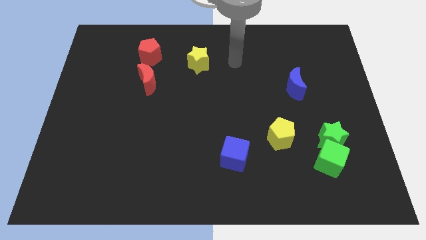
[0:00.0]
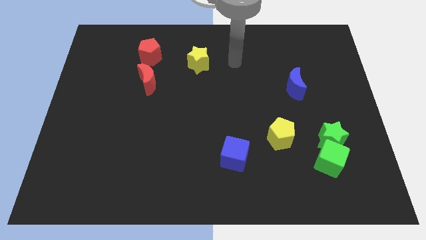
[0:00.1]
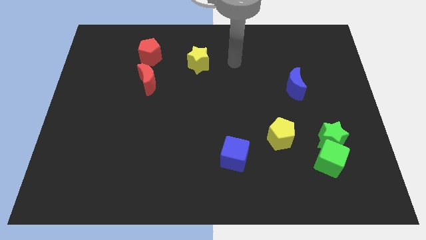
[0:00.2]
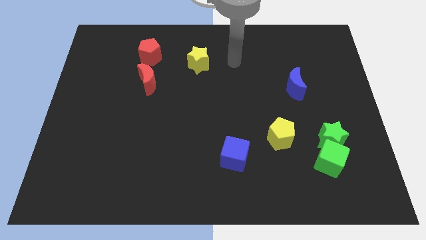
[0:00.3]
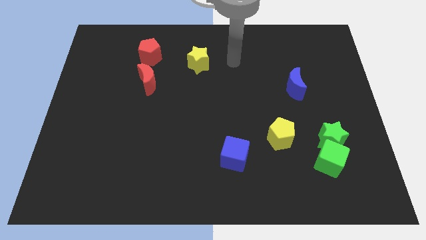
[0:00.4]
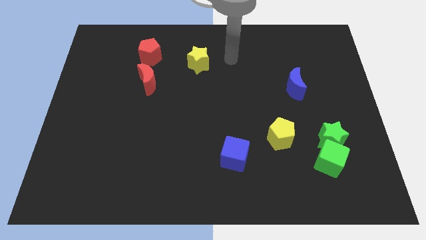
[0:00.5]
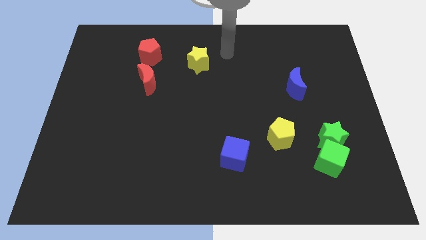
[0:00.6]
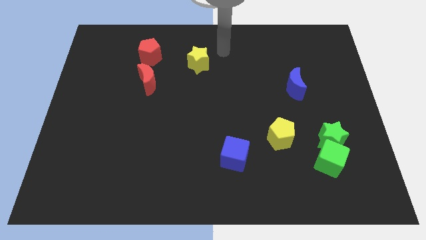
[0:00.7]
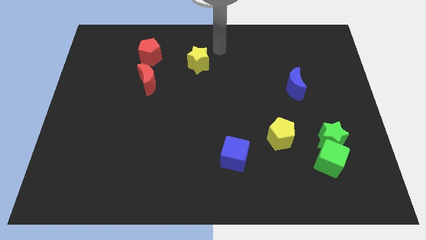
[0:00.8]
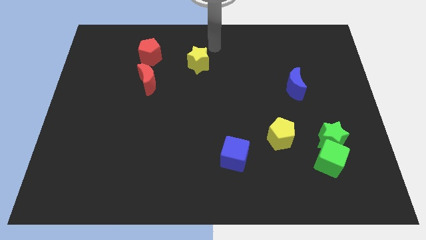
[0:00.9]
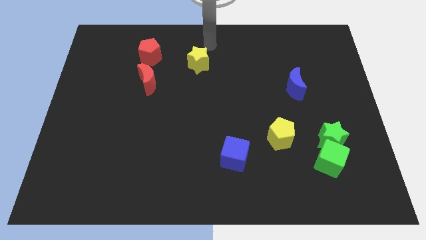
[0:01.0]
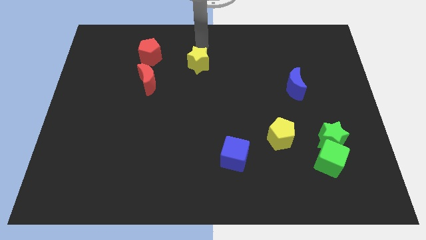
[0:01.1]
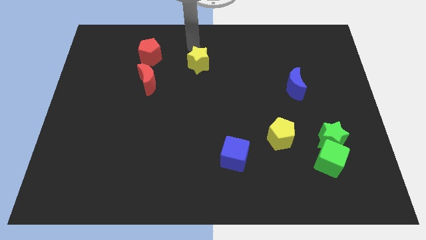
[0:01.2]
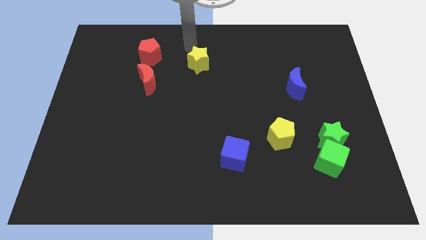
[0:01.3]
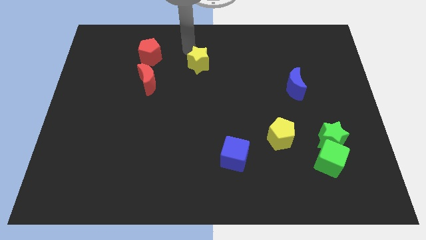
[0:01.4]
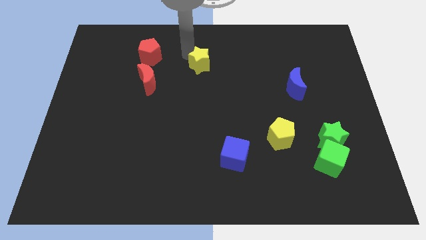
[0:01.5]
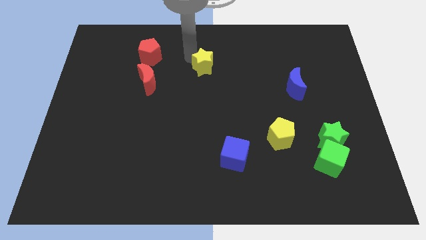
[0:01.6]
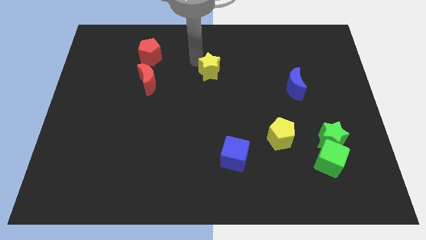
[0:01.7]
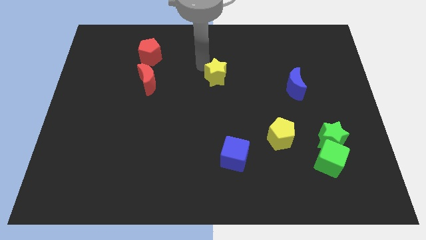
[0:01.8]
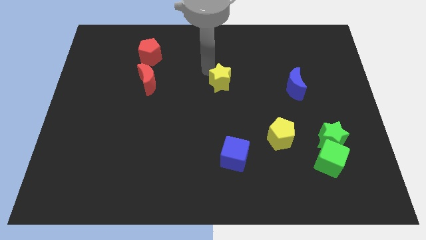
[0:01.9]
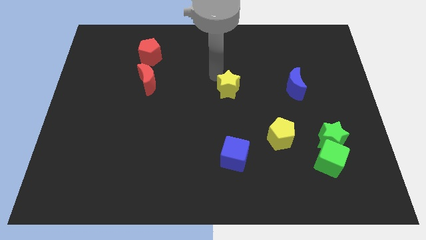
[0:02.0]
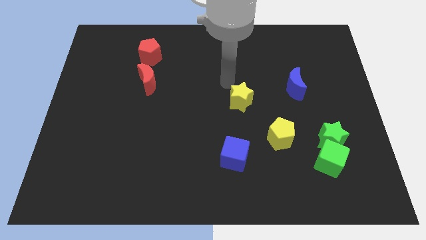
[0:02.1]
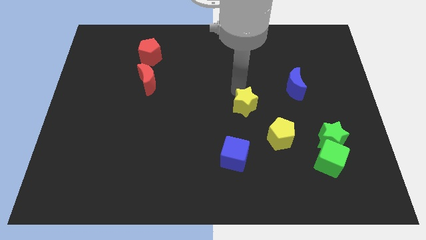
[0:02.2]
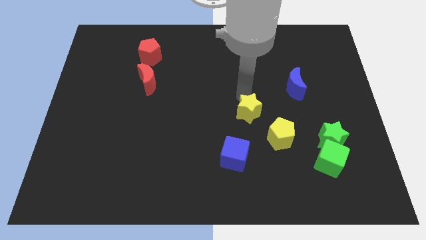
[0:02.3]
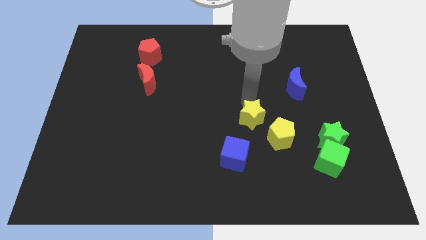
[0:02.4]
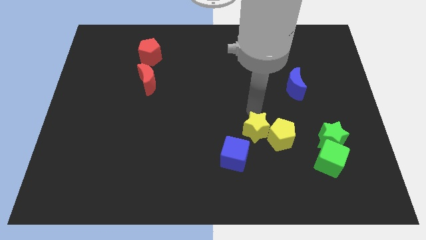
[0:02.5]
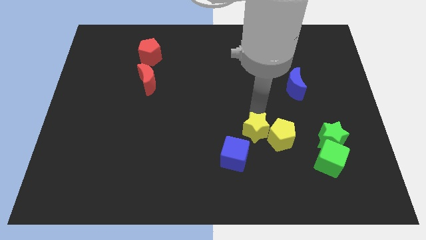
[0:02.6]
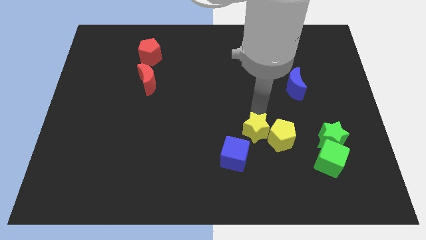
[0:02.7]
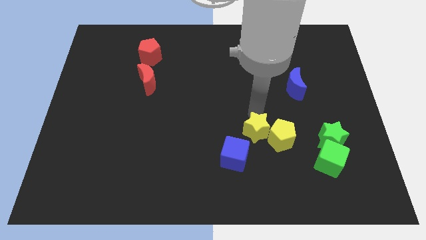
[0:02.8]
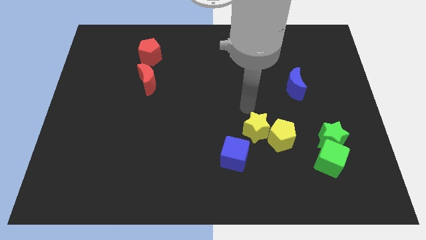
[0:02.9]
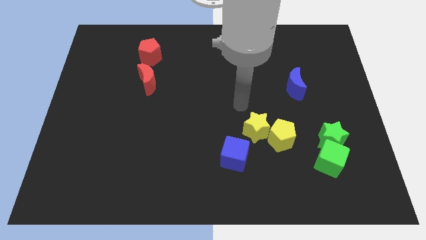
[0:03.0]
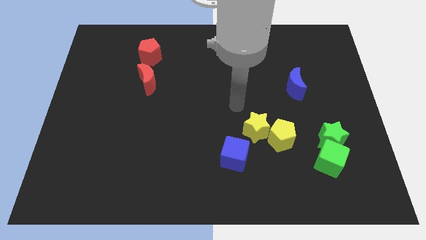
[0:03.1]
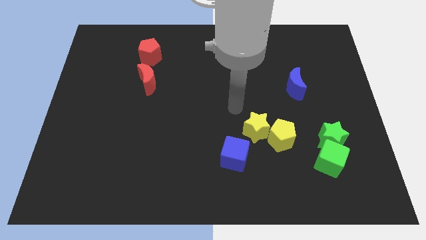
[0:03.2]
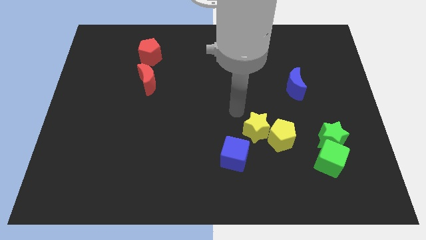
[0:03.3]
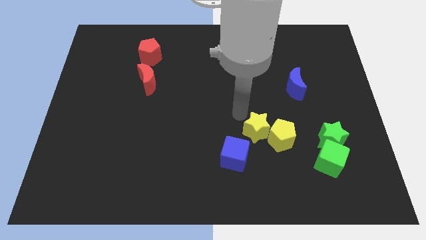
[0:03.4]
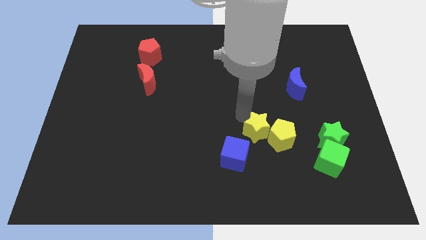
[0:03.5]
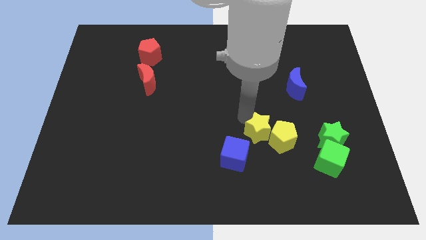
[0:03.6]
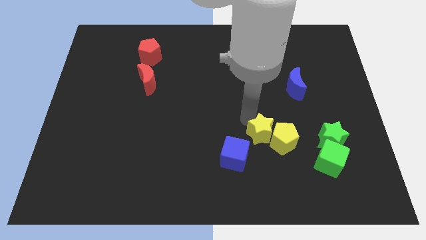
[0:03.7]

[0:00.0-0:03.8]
push the yellow star into the yellow pentagon

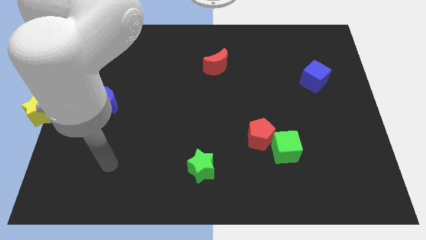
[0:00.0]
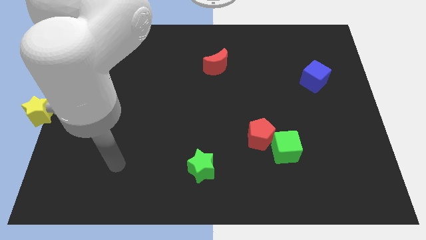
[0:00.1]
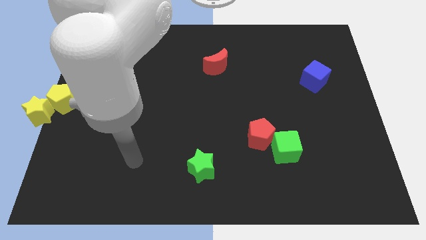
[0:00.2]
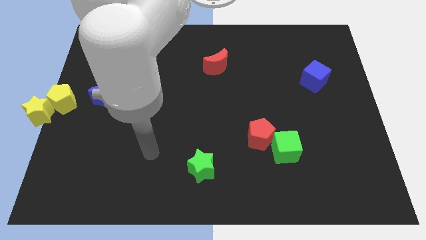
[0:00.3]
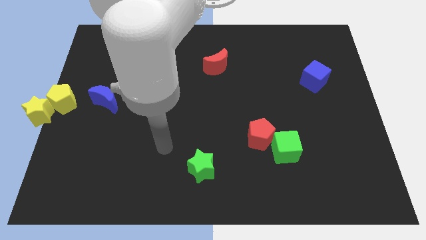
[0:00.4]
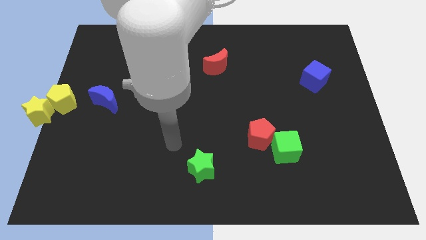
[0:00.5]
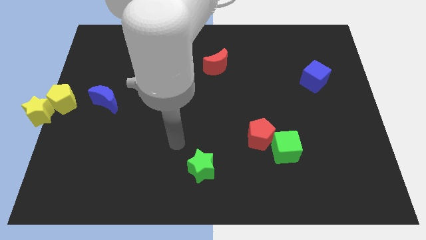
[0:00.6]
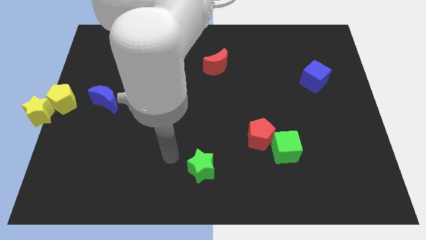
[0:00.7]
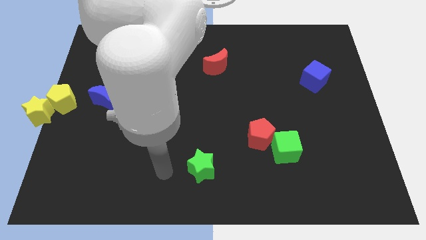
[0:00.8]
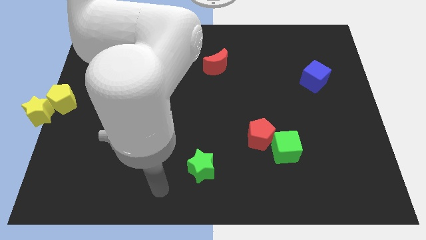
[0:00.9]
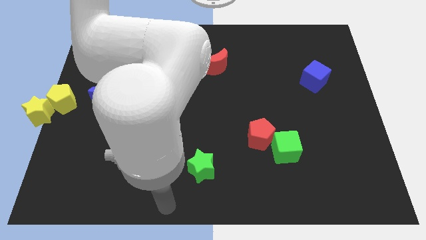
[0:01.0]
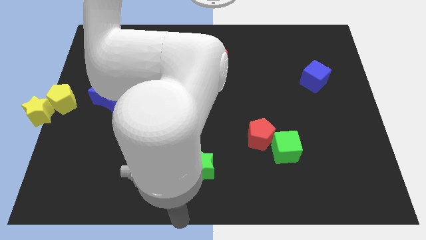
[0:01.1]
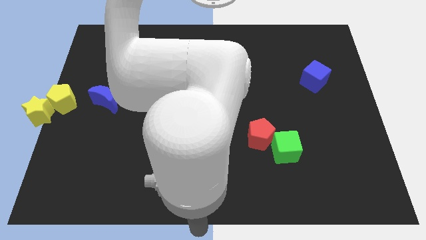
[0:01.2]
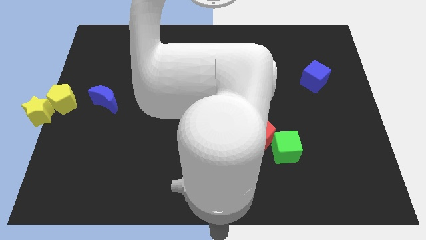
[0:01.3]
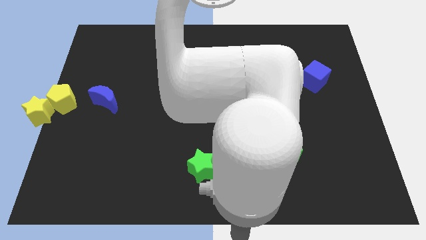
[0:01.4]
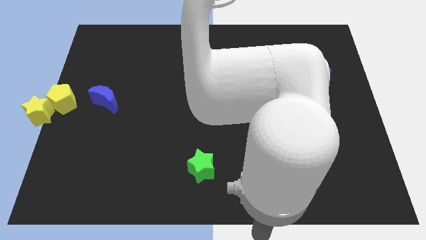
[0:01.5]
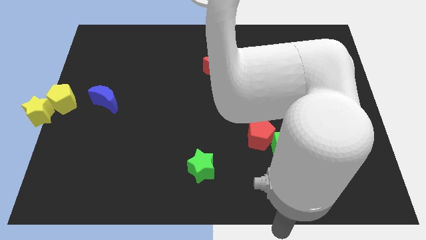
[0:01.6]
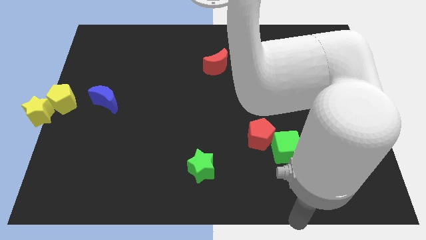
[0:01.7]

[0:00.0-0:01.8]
move the arm parallel to the bottom of the green cube

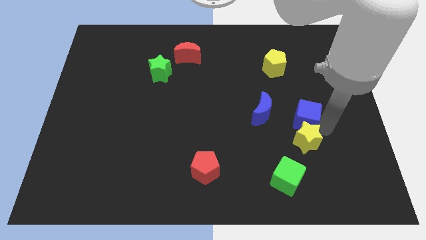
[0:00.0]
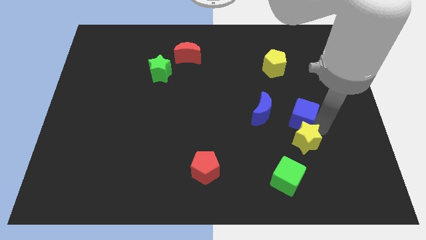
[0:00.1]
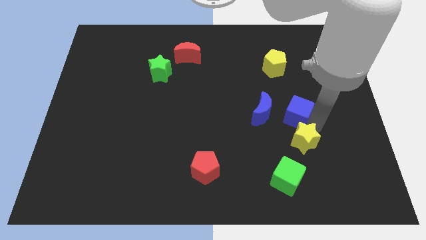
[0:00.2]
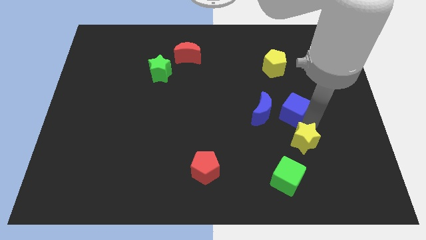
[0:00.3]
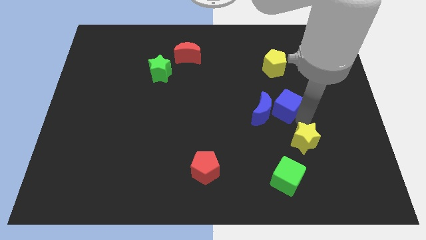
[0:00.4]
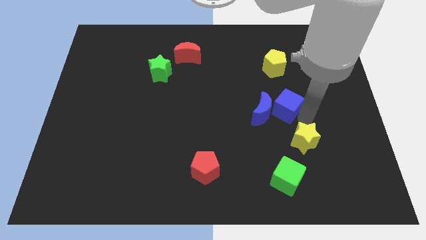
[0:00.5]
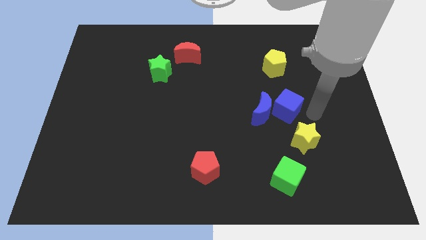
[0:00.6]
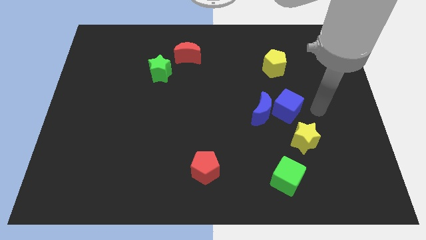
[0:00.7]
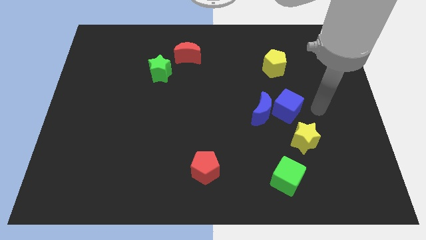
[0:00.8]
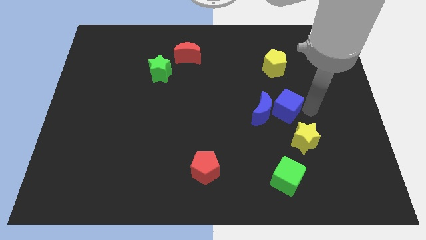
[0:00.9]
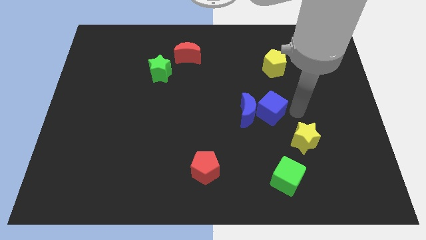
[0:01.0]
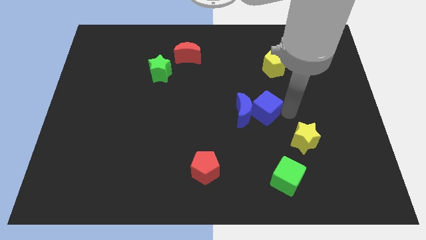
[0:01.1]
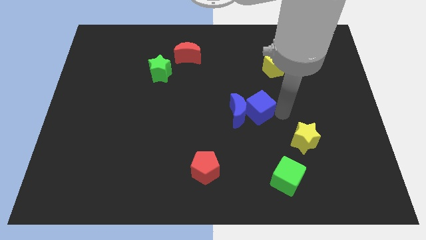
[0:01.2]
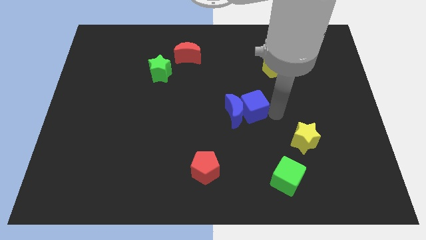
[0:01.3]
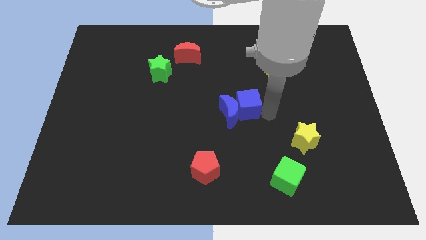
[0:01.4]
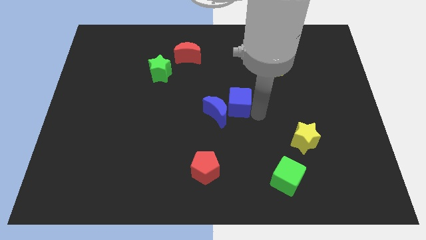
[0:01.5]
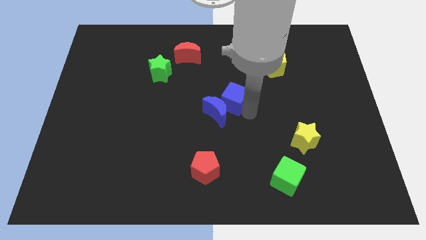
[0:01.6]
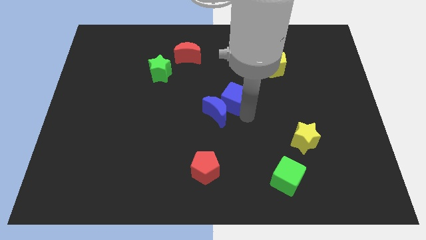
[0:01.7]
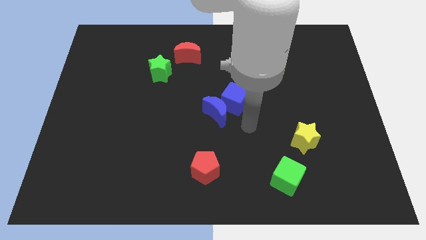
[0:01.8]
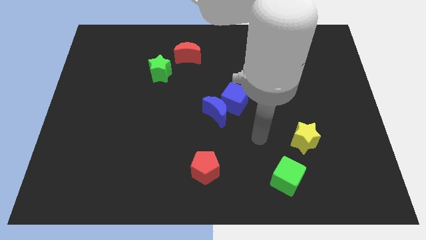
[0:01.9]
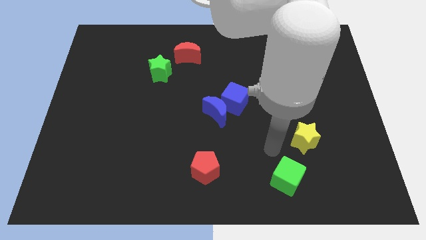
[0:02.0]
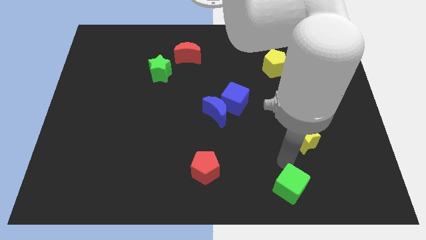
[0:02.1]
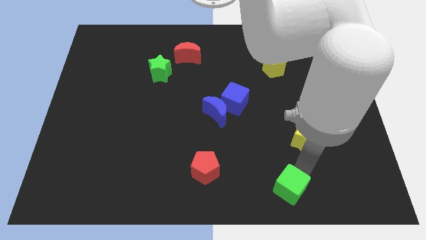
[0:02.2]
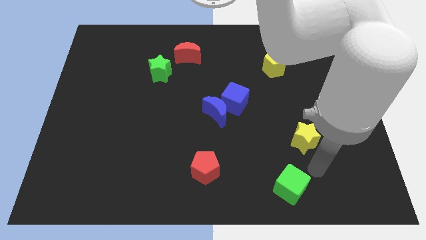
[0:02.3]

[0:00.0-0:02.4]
push blue cube and blue moon towards the center

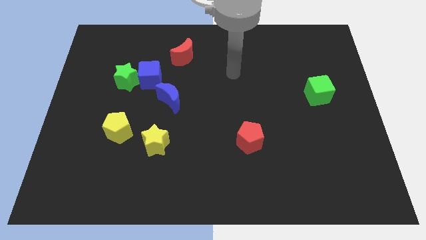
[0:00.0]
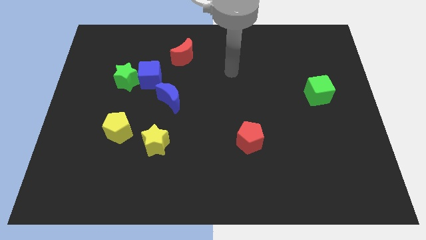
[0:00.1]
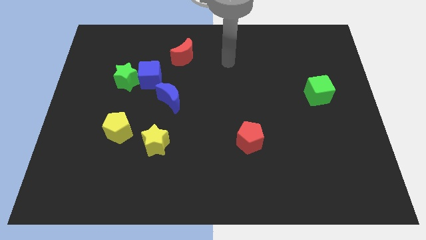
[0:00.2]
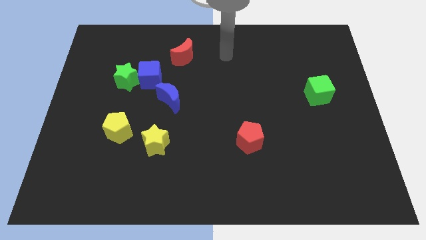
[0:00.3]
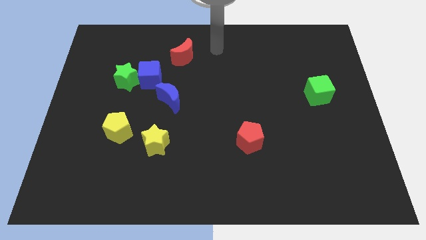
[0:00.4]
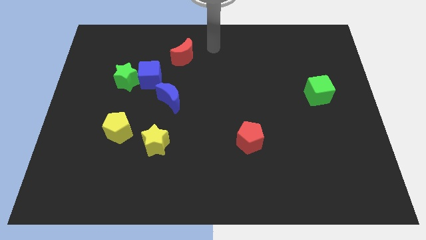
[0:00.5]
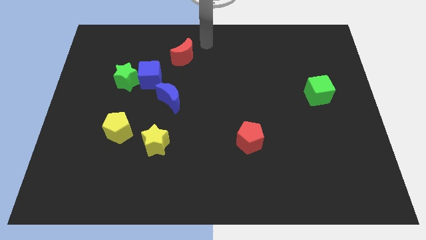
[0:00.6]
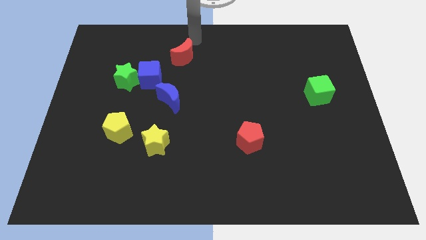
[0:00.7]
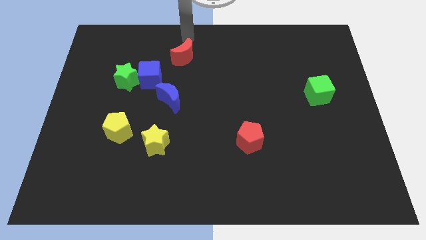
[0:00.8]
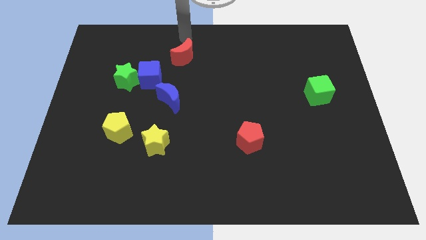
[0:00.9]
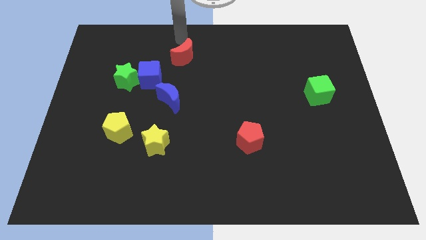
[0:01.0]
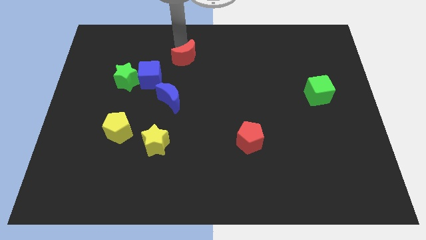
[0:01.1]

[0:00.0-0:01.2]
move your arm to the top of the board
